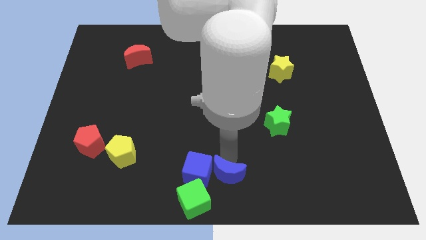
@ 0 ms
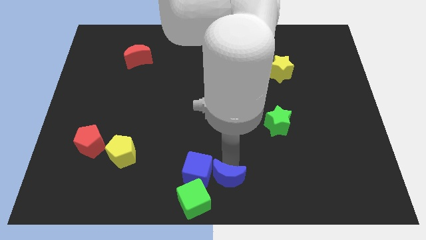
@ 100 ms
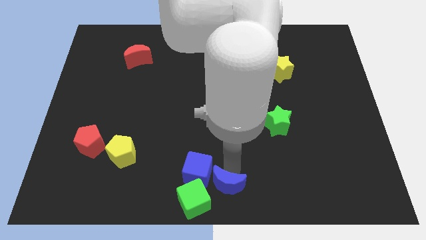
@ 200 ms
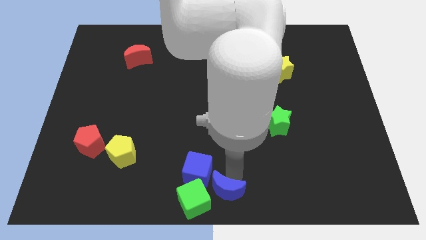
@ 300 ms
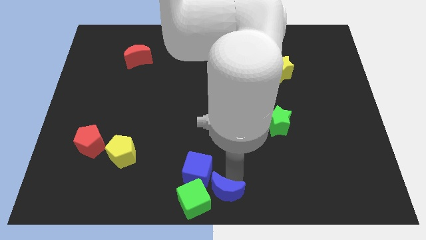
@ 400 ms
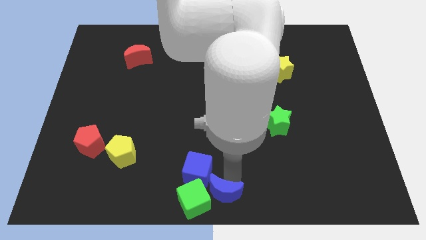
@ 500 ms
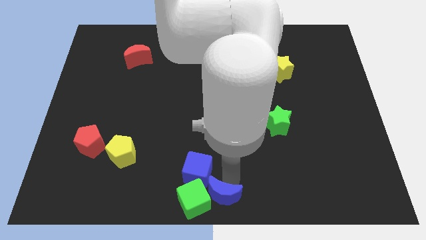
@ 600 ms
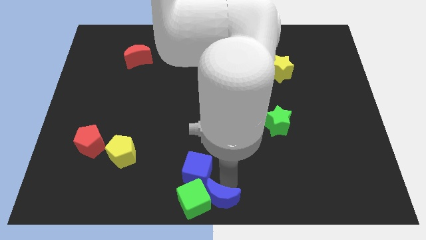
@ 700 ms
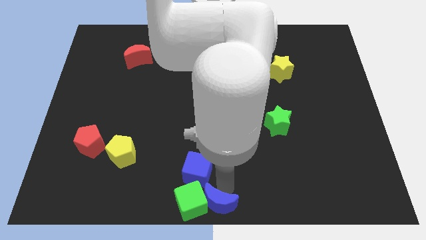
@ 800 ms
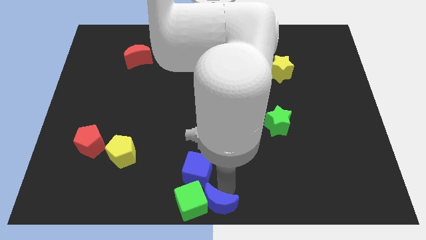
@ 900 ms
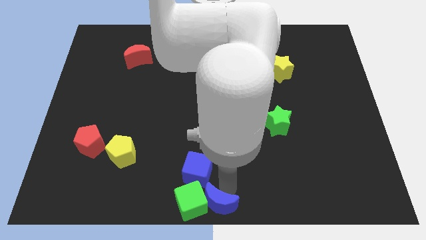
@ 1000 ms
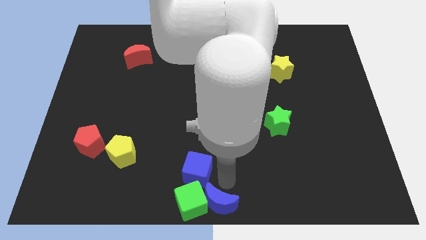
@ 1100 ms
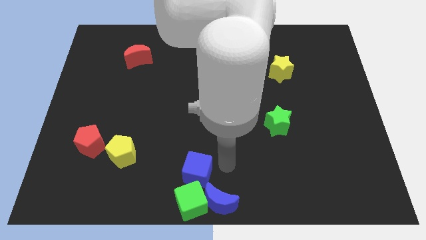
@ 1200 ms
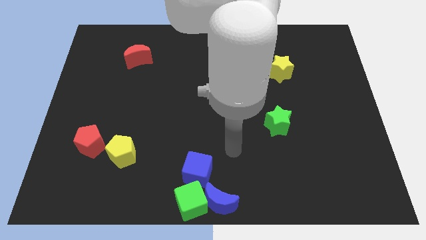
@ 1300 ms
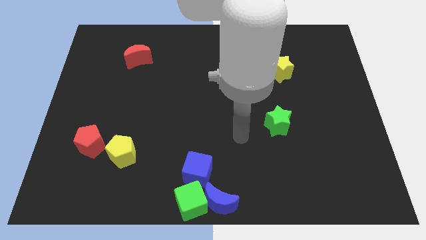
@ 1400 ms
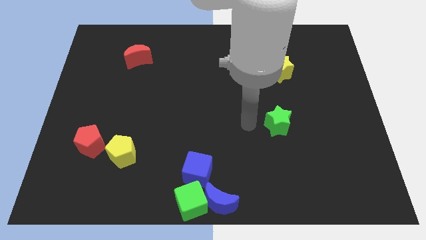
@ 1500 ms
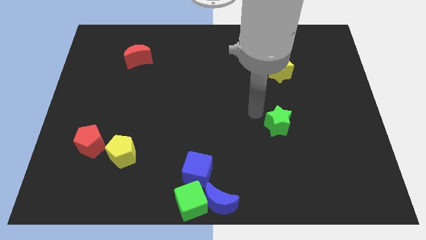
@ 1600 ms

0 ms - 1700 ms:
move the blue crescent to the right of the green cube

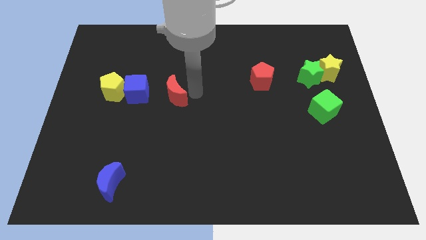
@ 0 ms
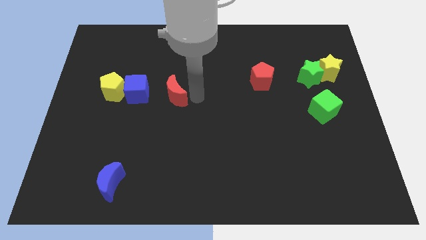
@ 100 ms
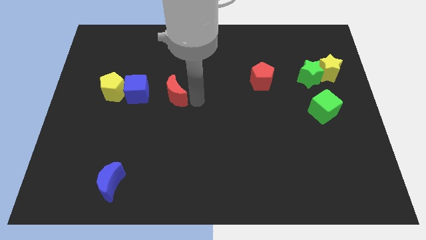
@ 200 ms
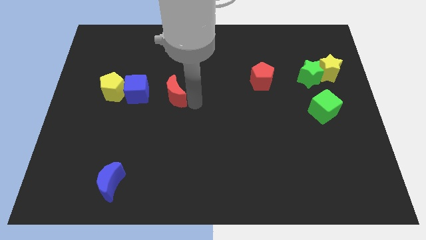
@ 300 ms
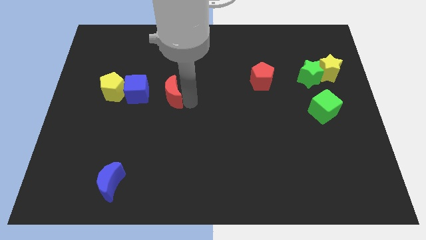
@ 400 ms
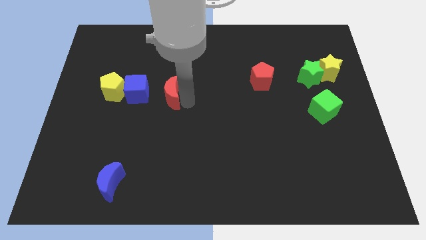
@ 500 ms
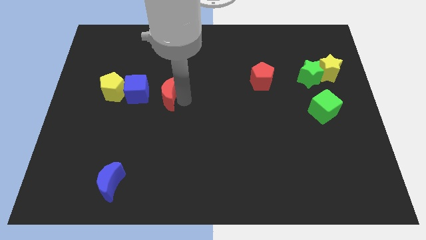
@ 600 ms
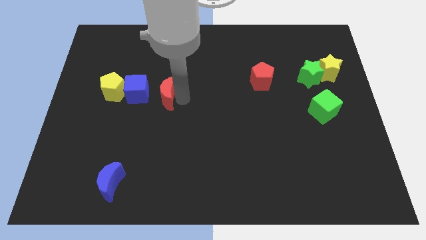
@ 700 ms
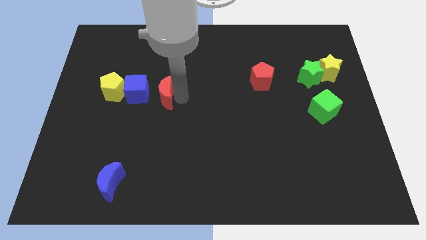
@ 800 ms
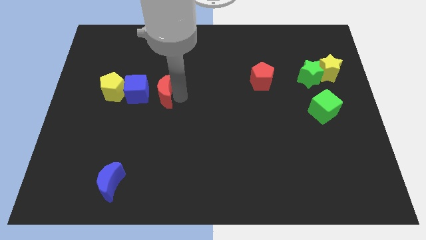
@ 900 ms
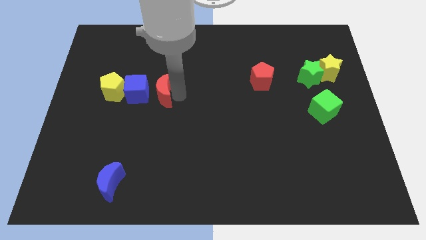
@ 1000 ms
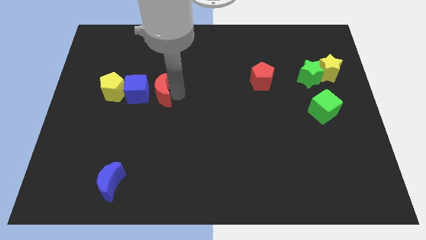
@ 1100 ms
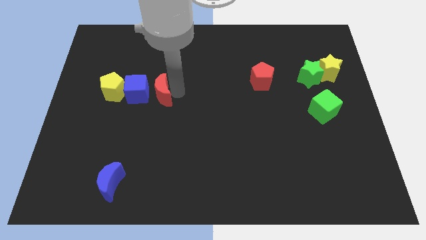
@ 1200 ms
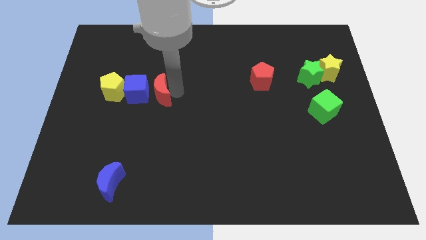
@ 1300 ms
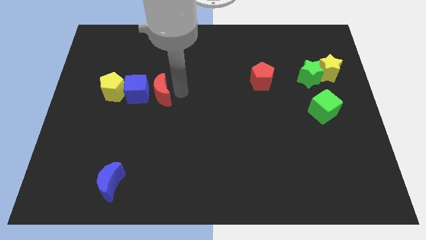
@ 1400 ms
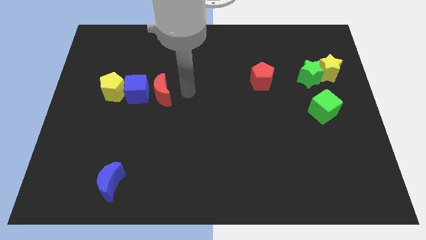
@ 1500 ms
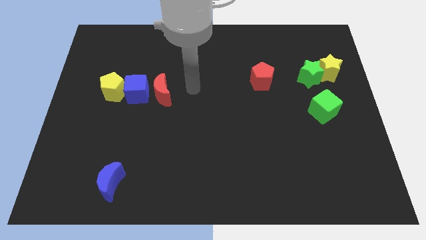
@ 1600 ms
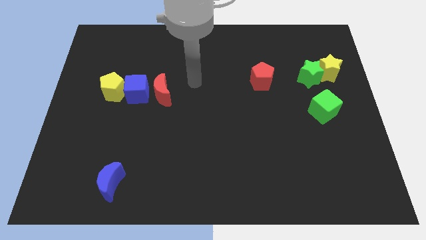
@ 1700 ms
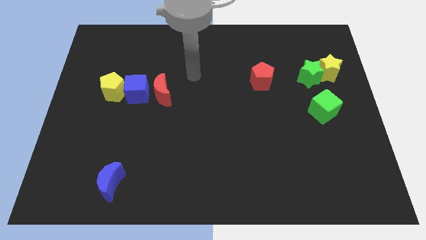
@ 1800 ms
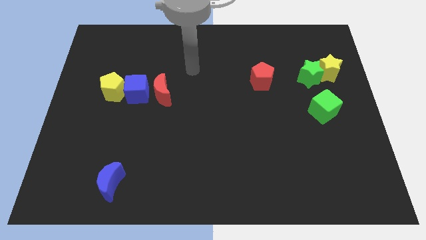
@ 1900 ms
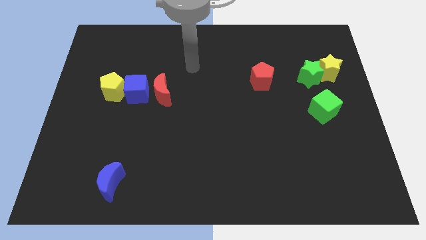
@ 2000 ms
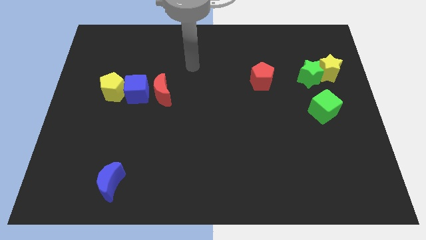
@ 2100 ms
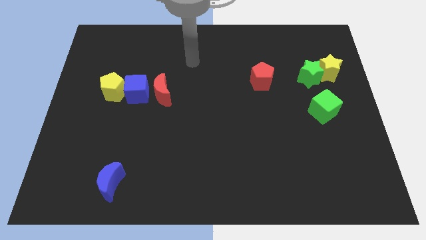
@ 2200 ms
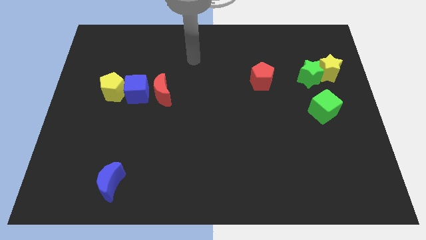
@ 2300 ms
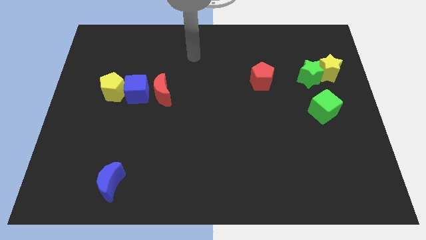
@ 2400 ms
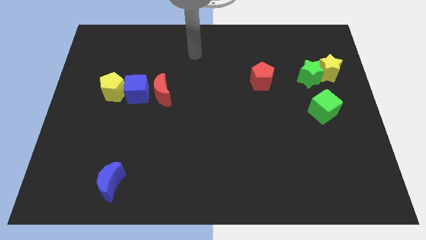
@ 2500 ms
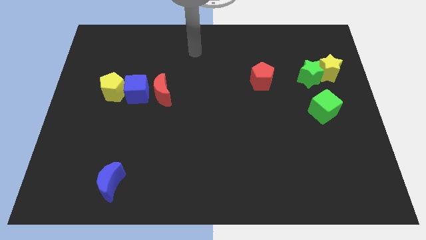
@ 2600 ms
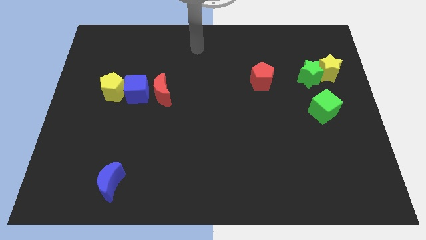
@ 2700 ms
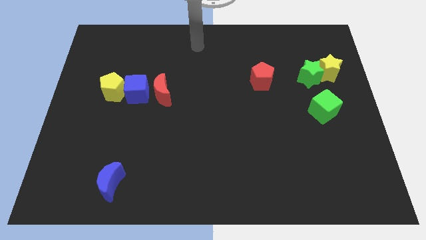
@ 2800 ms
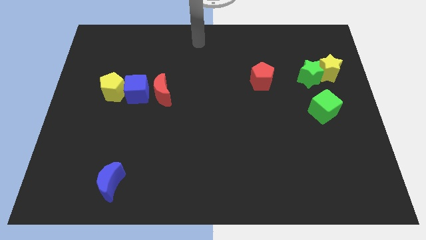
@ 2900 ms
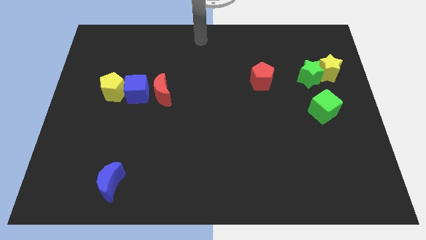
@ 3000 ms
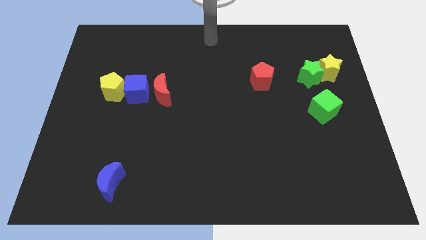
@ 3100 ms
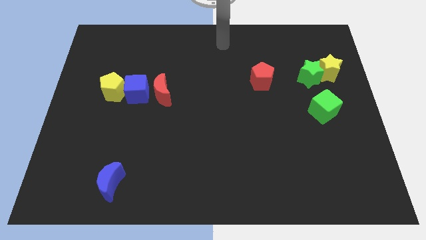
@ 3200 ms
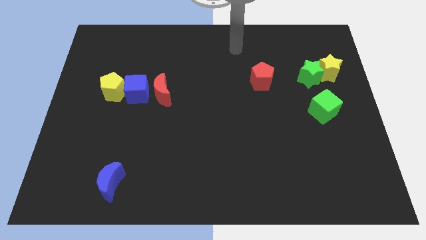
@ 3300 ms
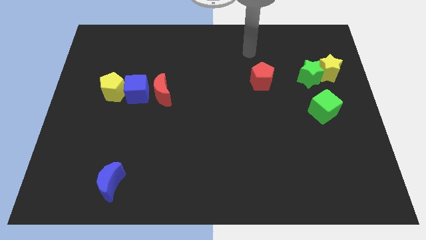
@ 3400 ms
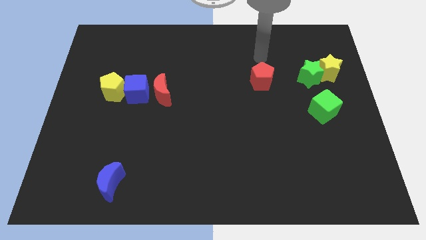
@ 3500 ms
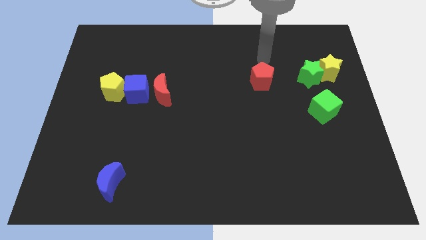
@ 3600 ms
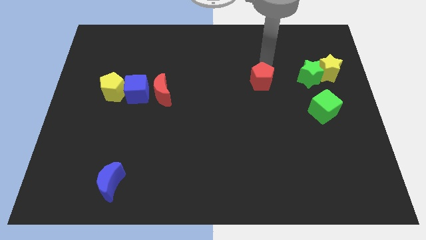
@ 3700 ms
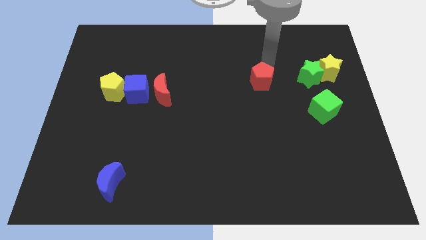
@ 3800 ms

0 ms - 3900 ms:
place your arm at the top of red pentagon

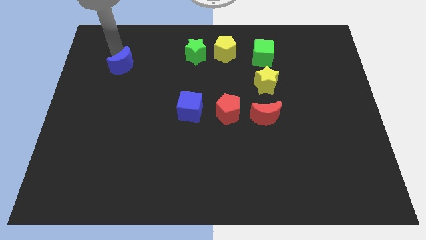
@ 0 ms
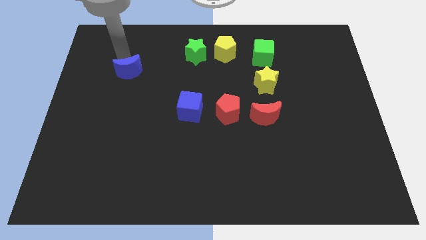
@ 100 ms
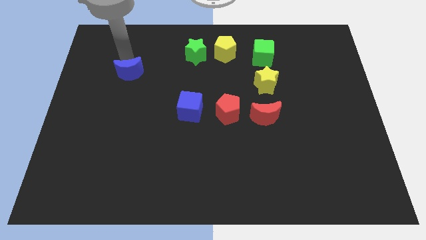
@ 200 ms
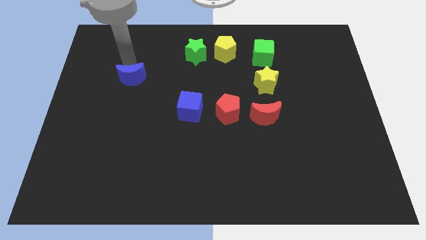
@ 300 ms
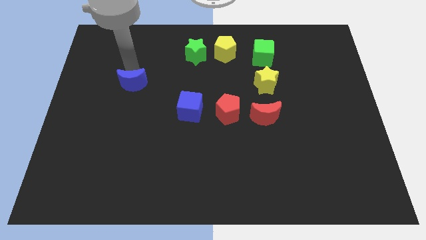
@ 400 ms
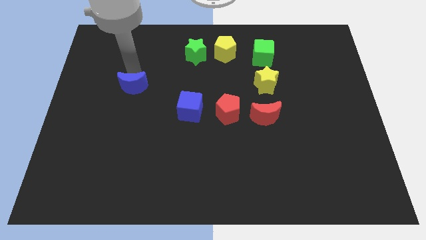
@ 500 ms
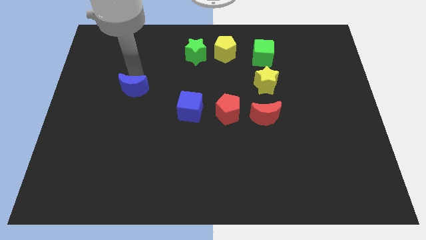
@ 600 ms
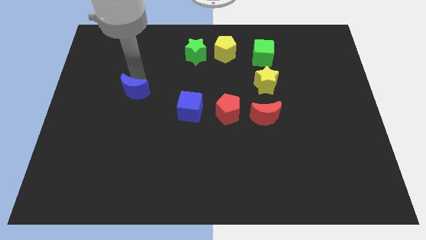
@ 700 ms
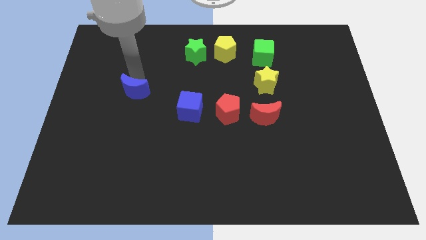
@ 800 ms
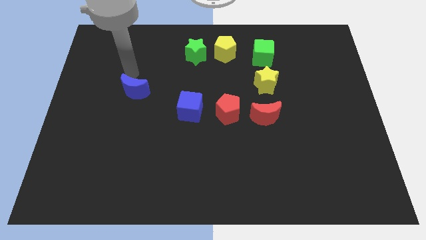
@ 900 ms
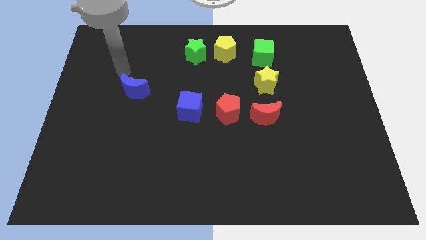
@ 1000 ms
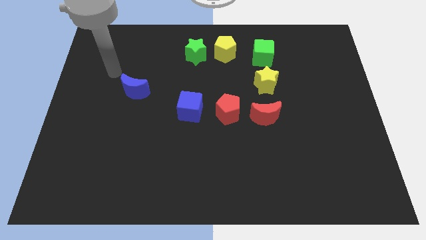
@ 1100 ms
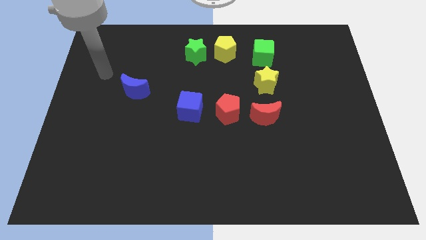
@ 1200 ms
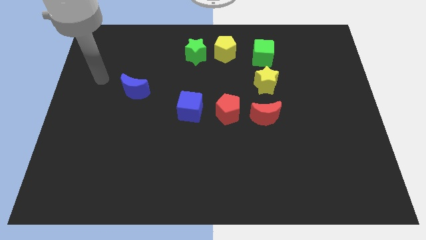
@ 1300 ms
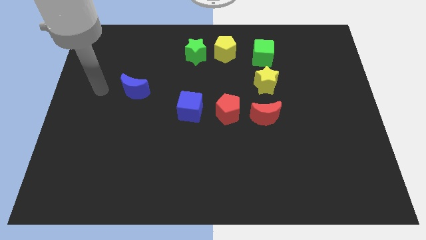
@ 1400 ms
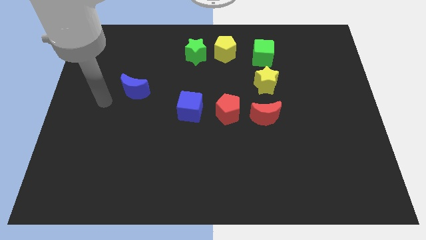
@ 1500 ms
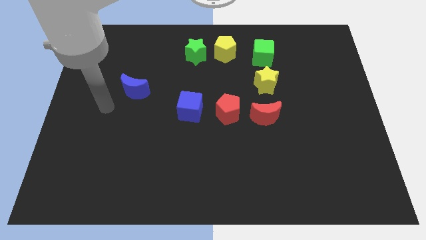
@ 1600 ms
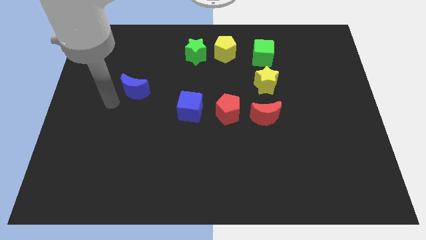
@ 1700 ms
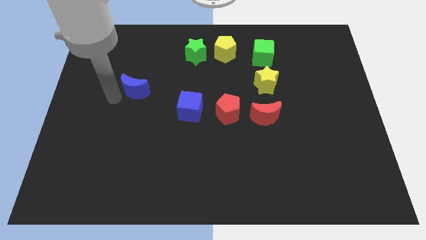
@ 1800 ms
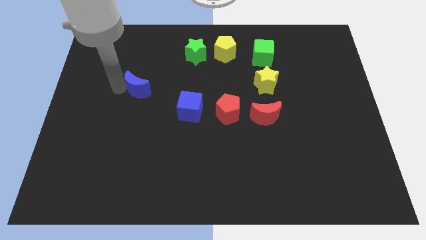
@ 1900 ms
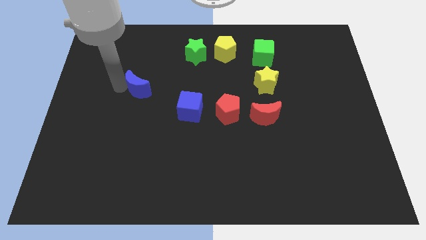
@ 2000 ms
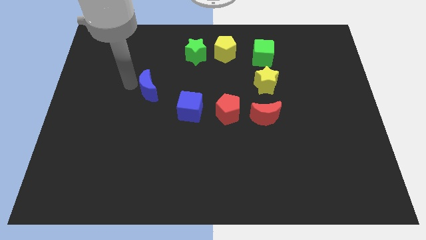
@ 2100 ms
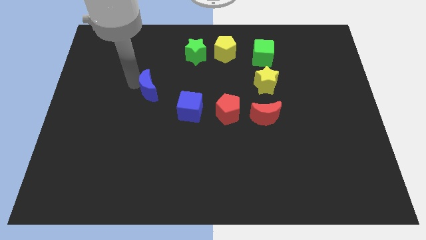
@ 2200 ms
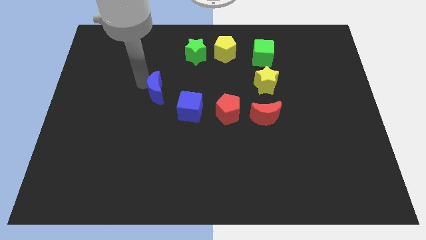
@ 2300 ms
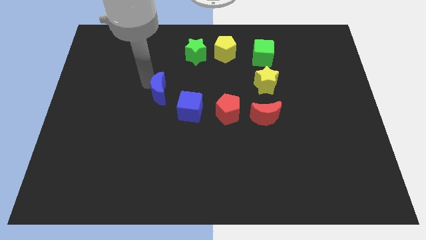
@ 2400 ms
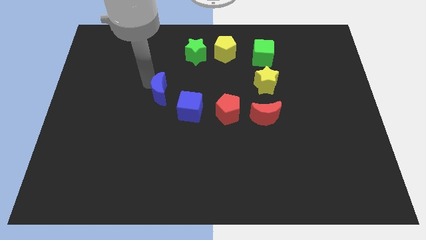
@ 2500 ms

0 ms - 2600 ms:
move the blue crescent towards the blue cube

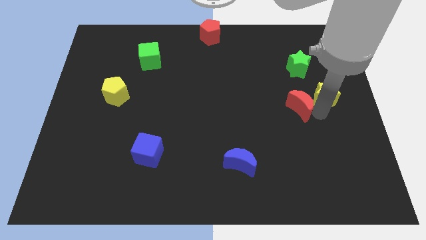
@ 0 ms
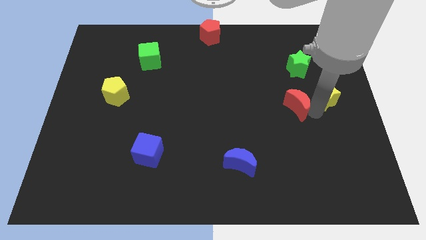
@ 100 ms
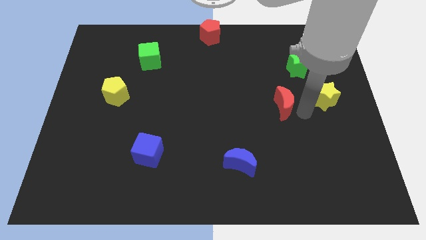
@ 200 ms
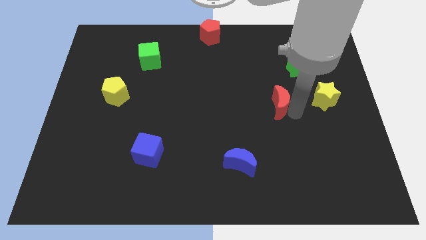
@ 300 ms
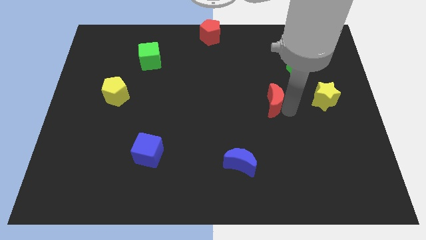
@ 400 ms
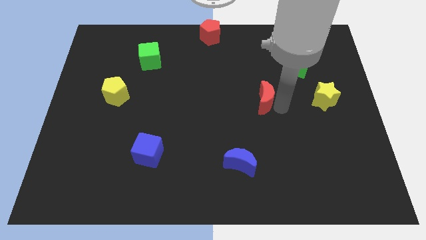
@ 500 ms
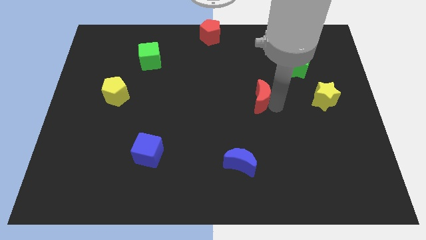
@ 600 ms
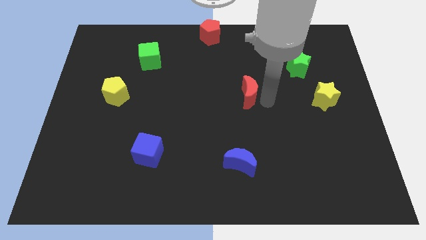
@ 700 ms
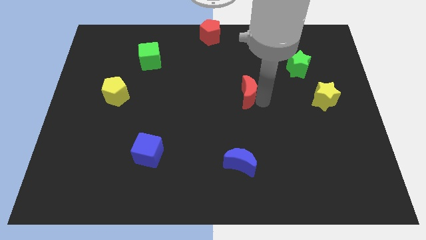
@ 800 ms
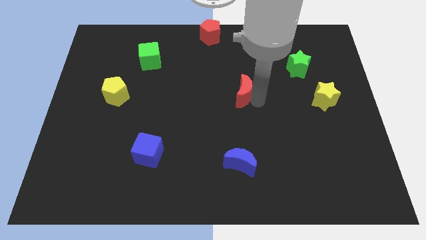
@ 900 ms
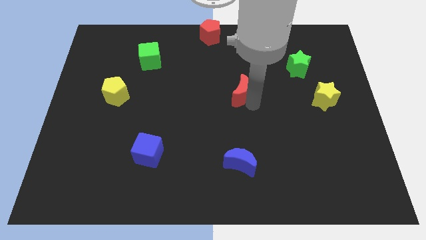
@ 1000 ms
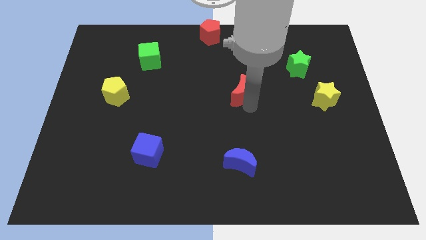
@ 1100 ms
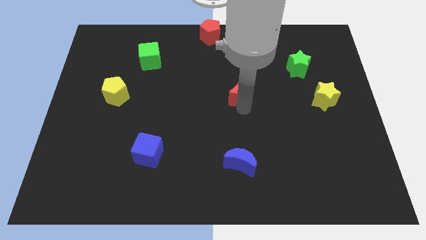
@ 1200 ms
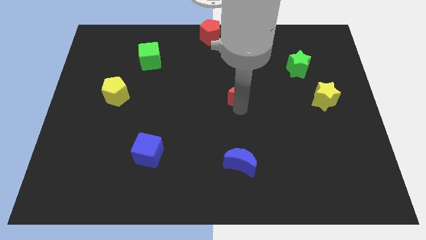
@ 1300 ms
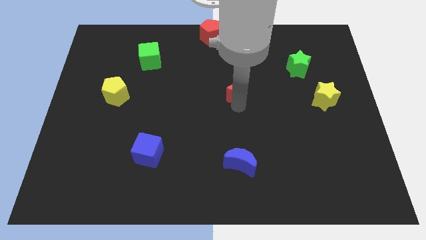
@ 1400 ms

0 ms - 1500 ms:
move the red crescent away from the yellow star
